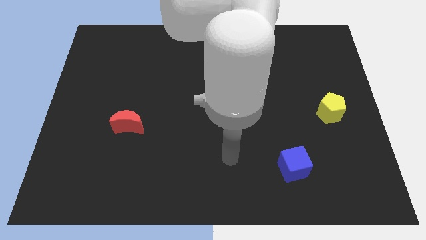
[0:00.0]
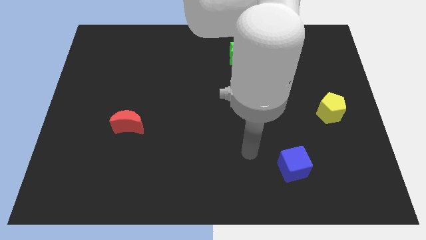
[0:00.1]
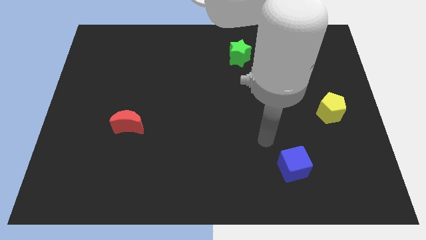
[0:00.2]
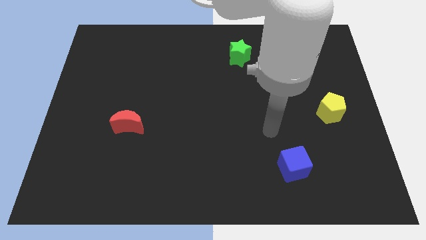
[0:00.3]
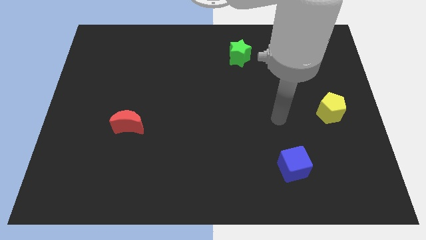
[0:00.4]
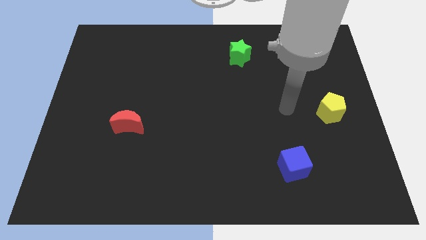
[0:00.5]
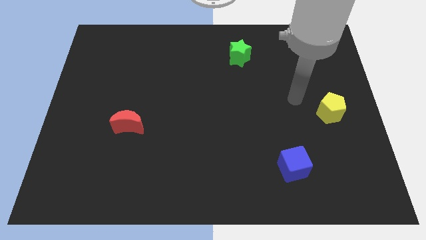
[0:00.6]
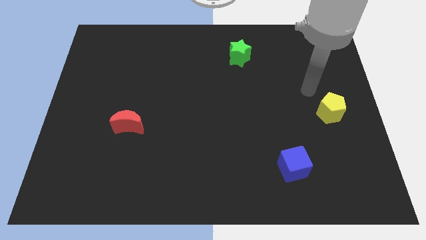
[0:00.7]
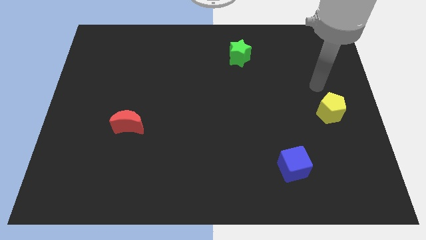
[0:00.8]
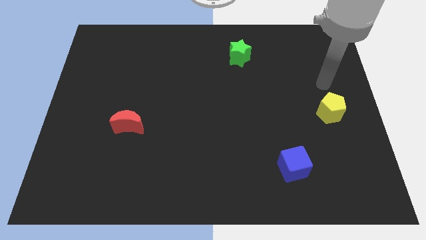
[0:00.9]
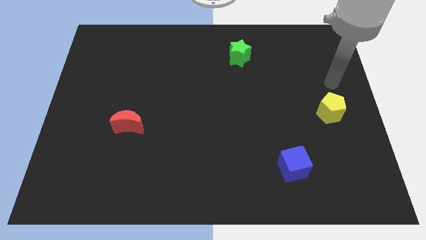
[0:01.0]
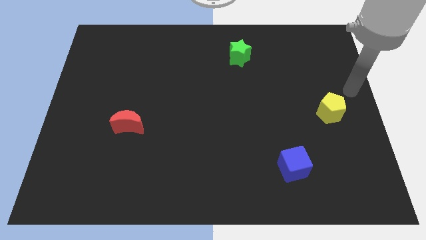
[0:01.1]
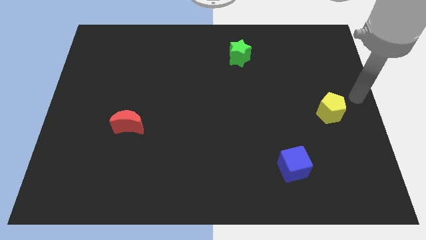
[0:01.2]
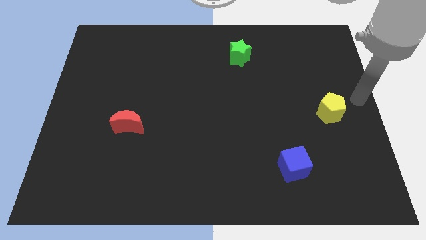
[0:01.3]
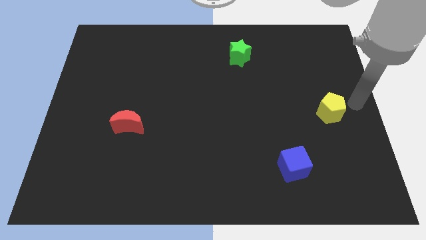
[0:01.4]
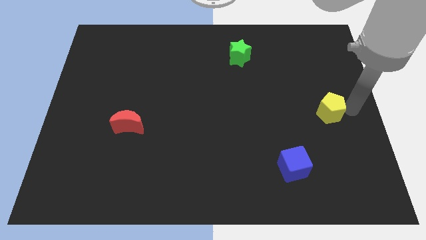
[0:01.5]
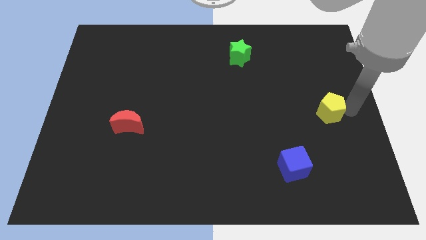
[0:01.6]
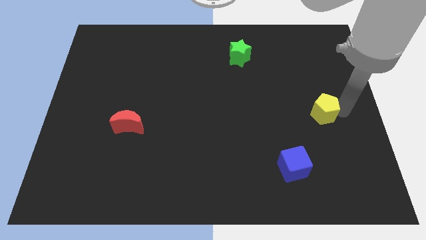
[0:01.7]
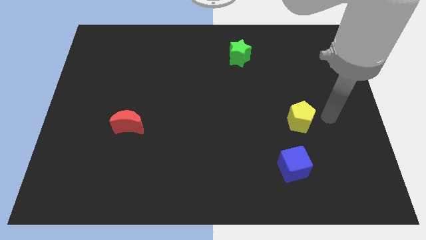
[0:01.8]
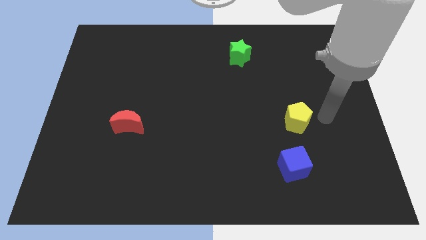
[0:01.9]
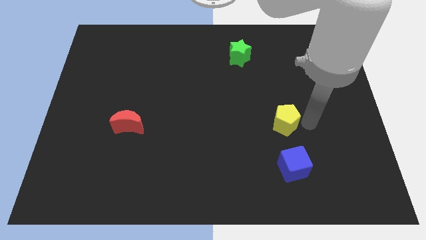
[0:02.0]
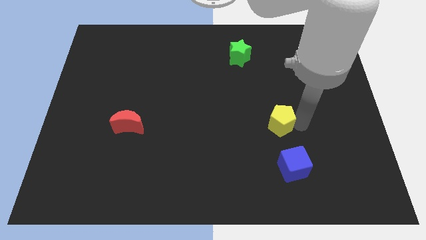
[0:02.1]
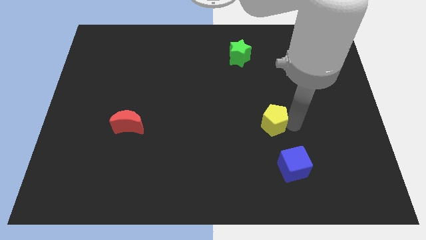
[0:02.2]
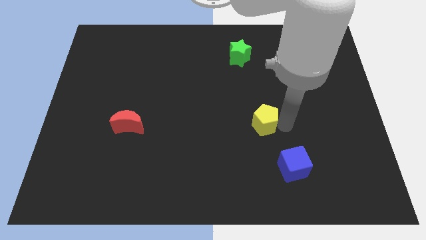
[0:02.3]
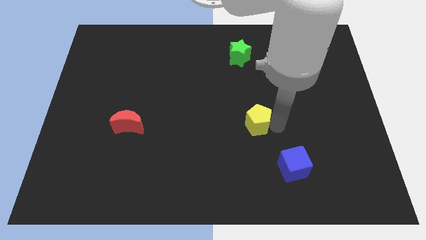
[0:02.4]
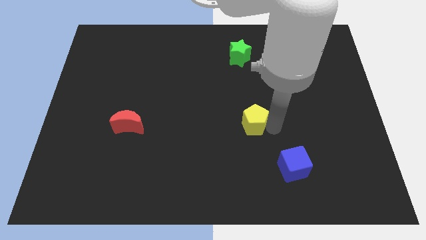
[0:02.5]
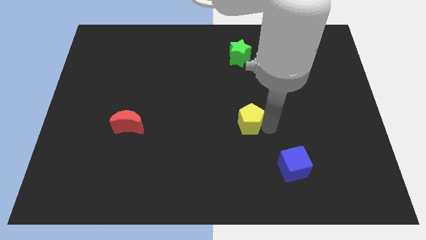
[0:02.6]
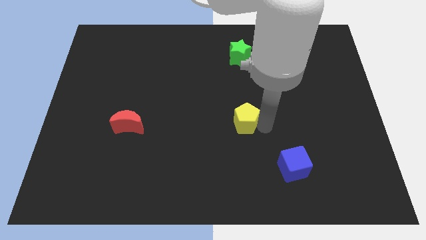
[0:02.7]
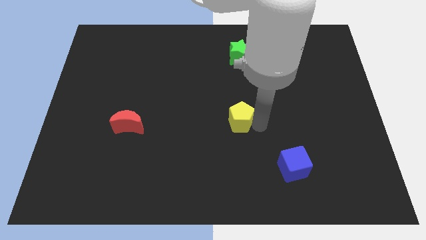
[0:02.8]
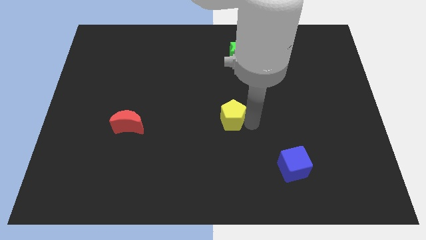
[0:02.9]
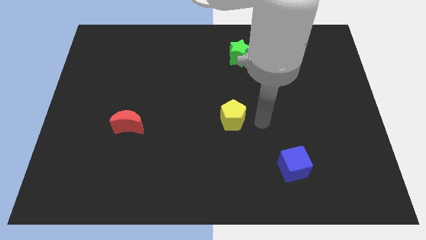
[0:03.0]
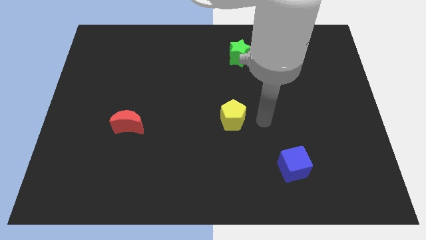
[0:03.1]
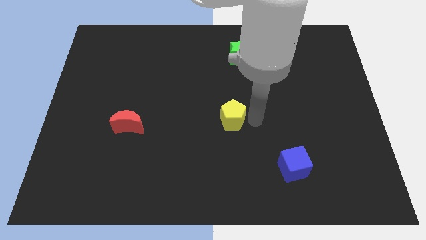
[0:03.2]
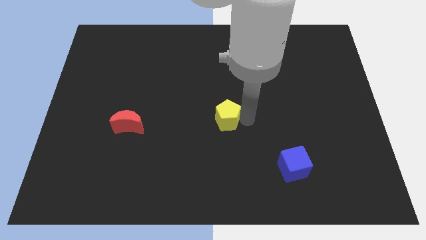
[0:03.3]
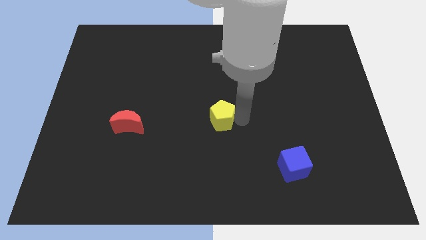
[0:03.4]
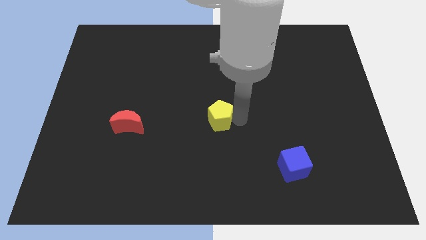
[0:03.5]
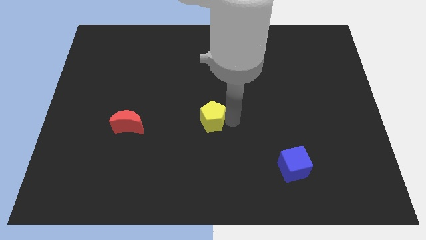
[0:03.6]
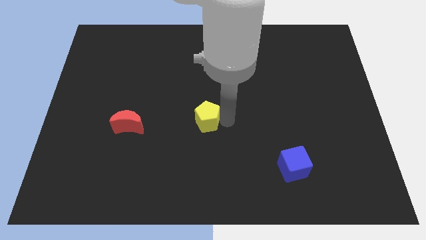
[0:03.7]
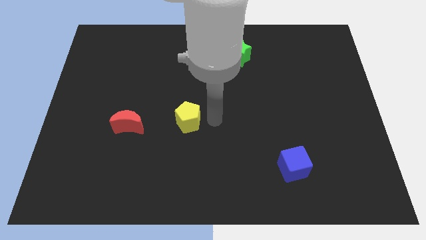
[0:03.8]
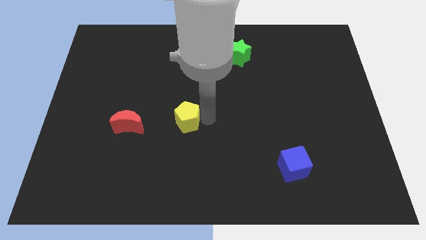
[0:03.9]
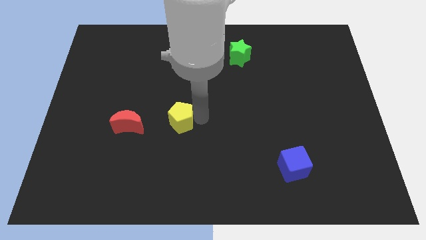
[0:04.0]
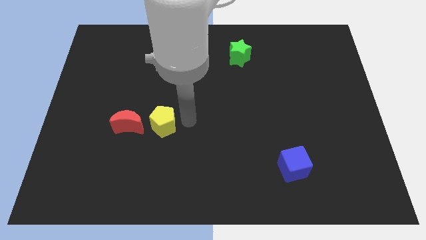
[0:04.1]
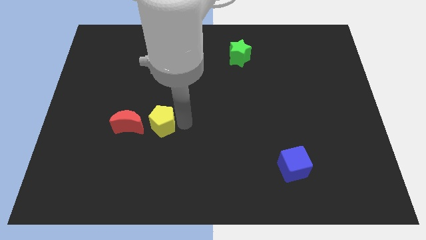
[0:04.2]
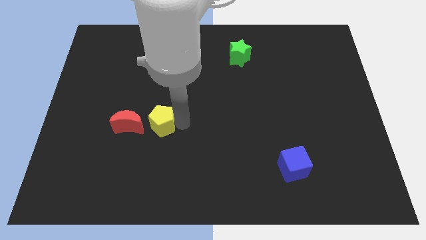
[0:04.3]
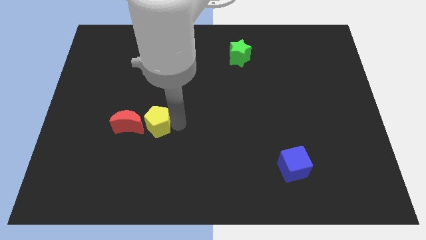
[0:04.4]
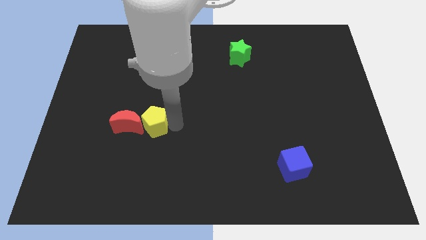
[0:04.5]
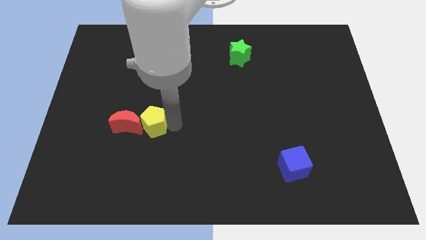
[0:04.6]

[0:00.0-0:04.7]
put the yellow block towards the red moon

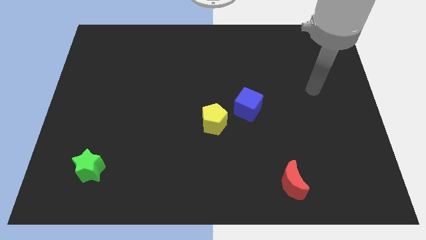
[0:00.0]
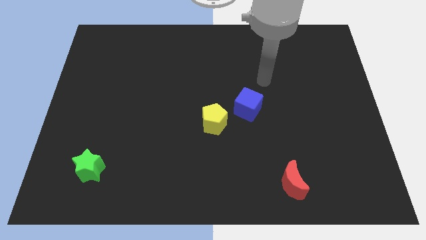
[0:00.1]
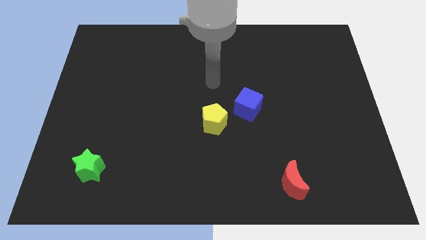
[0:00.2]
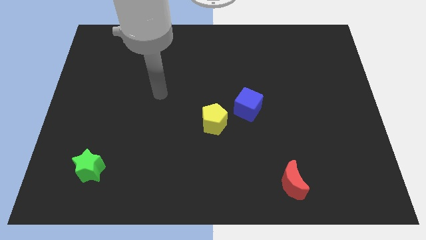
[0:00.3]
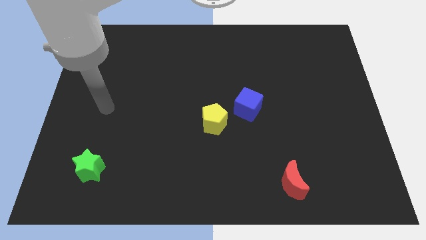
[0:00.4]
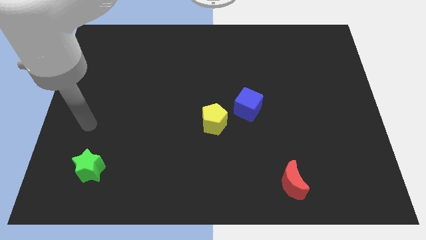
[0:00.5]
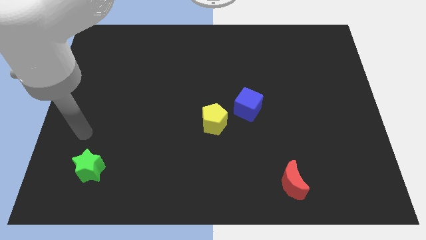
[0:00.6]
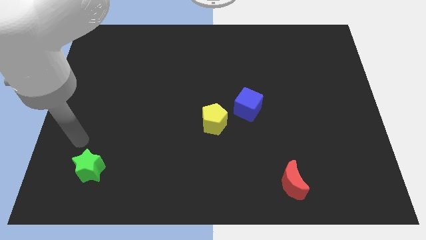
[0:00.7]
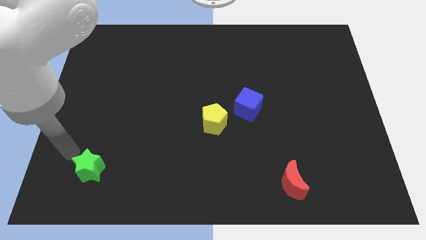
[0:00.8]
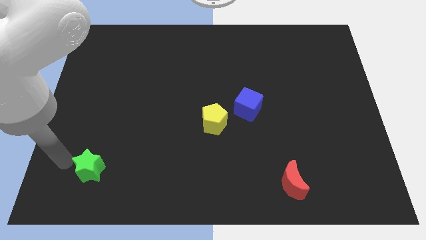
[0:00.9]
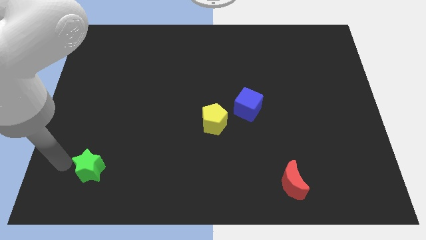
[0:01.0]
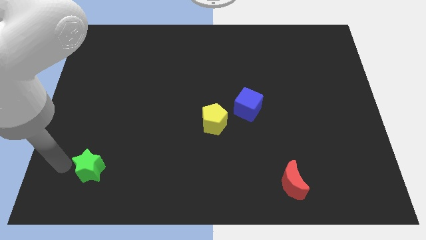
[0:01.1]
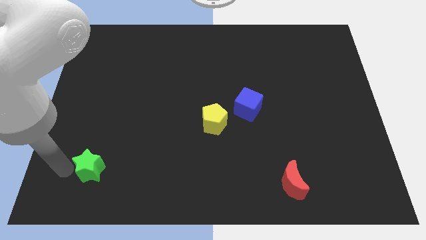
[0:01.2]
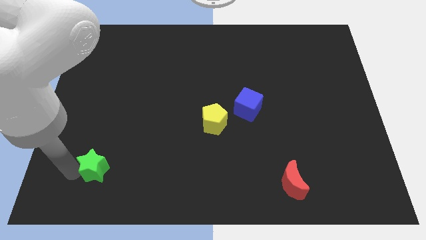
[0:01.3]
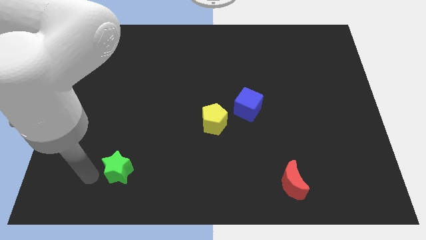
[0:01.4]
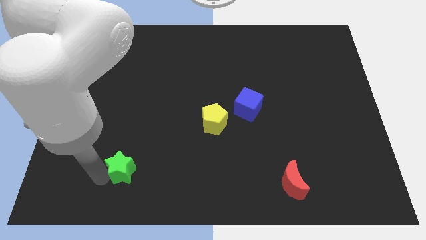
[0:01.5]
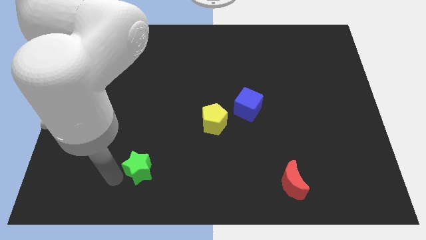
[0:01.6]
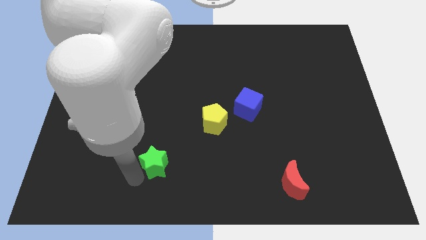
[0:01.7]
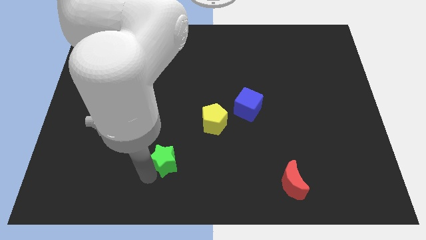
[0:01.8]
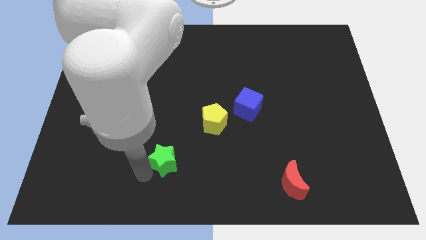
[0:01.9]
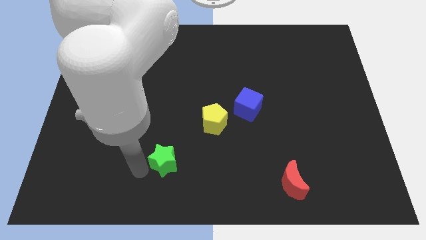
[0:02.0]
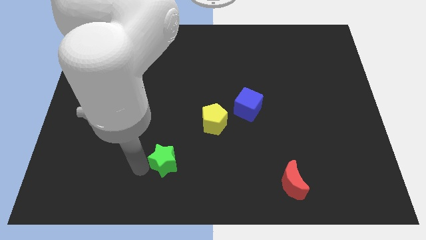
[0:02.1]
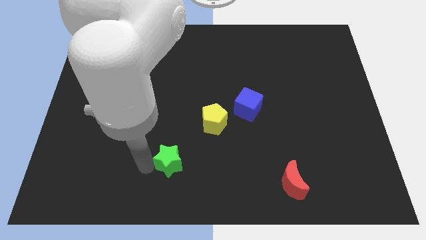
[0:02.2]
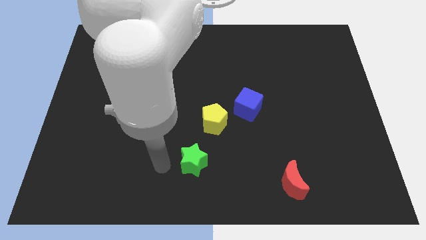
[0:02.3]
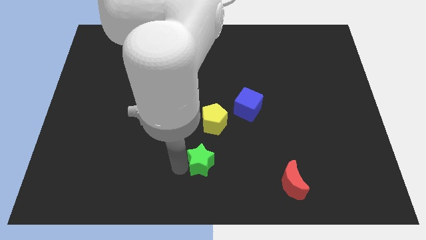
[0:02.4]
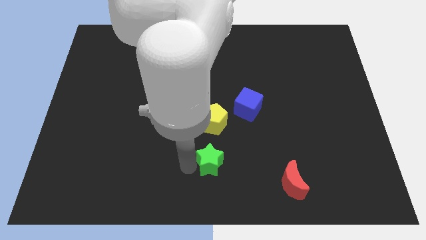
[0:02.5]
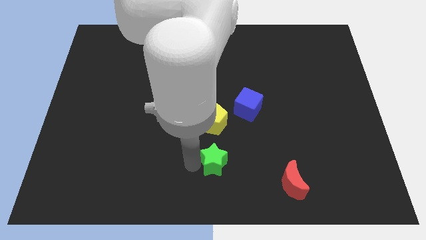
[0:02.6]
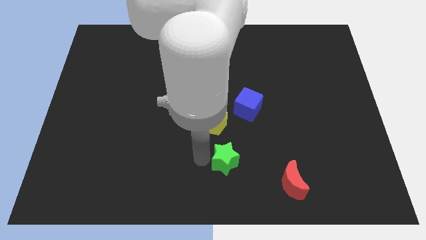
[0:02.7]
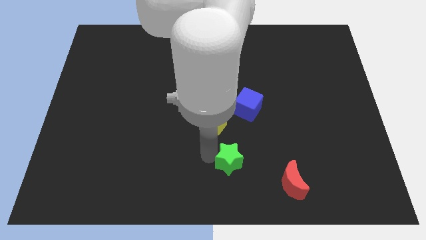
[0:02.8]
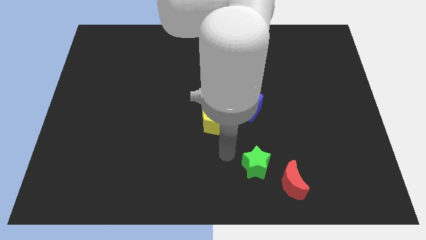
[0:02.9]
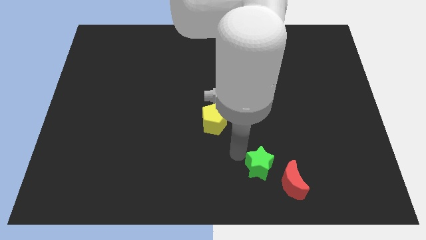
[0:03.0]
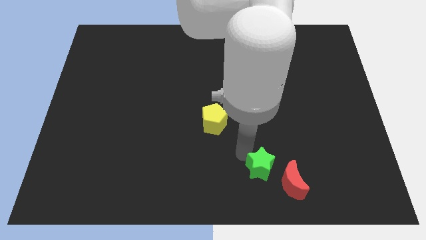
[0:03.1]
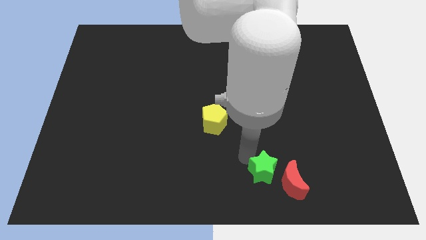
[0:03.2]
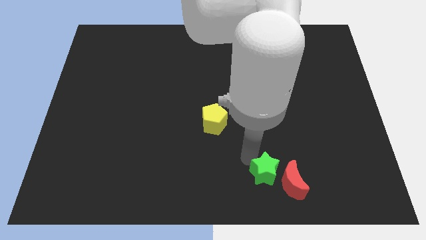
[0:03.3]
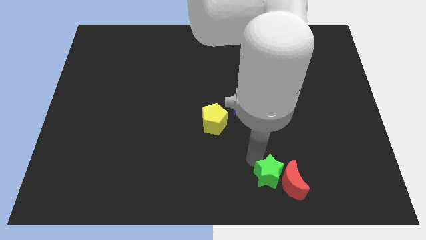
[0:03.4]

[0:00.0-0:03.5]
push the green block next to the red block

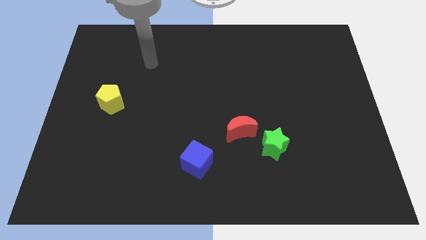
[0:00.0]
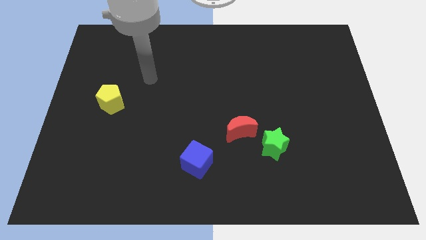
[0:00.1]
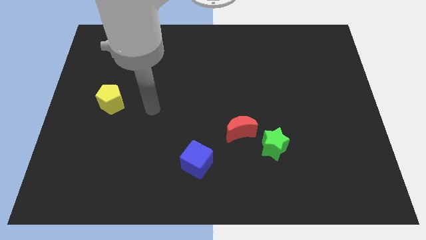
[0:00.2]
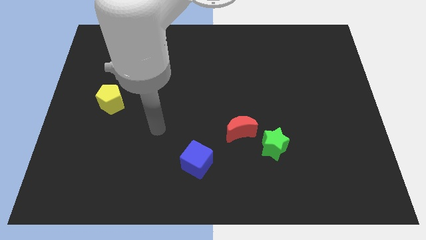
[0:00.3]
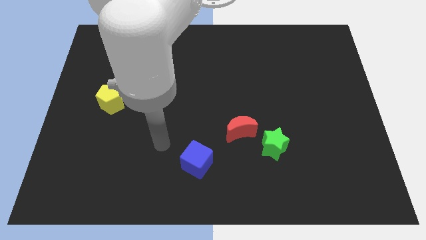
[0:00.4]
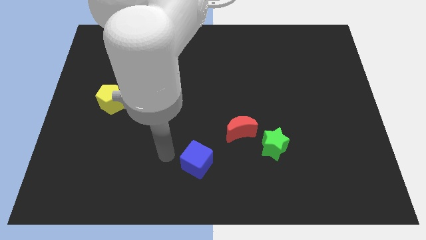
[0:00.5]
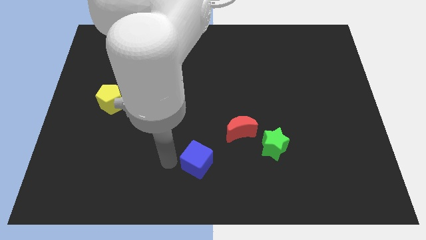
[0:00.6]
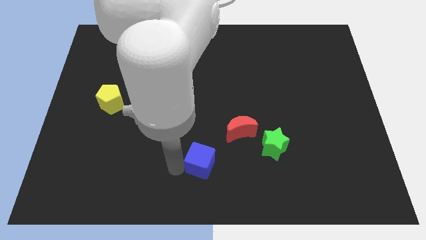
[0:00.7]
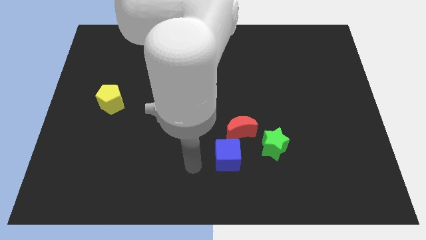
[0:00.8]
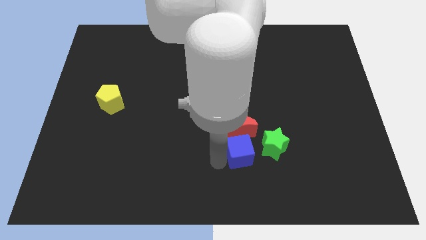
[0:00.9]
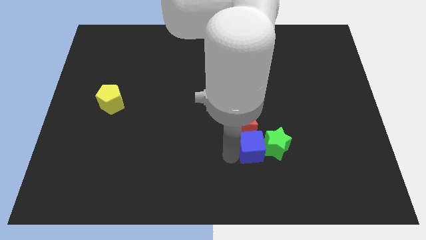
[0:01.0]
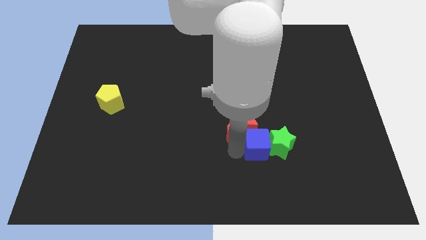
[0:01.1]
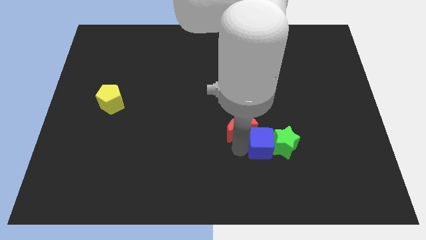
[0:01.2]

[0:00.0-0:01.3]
slide the cube to the star
